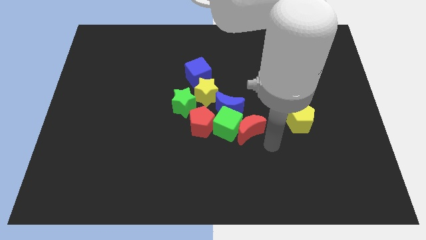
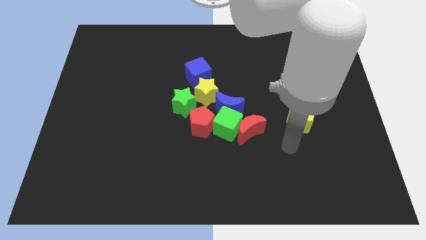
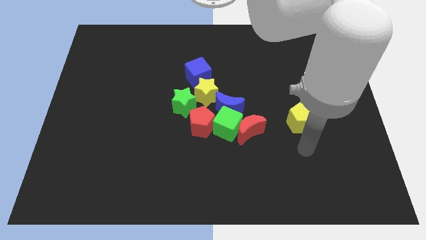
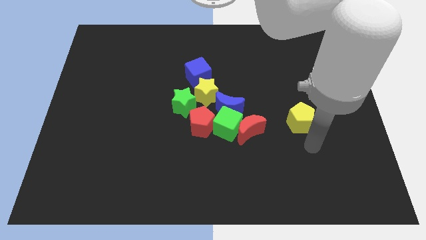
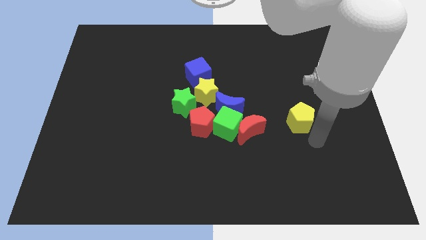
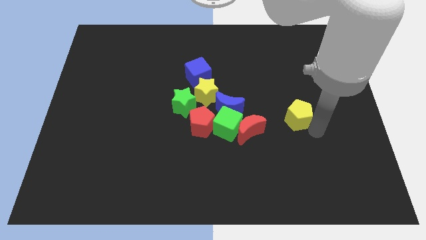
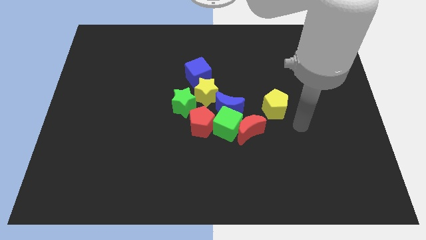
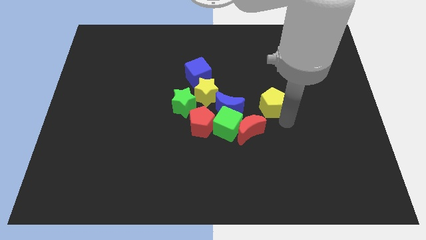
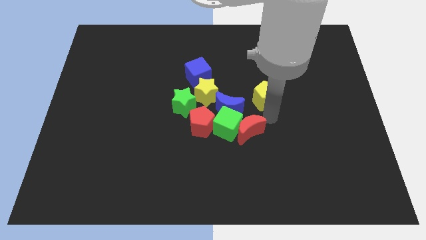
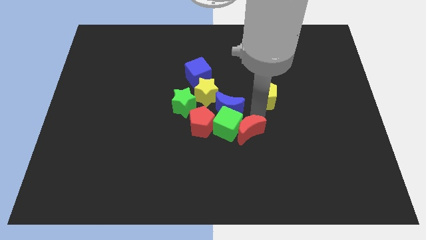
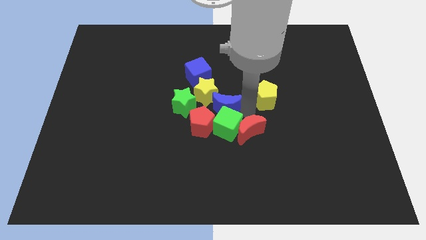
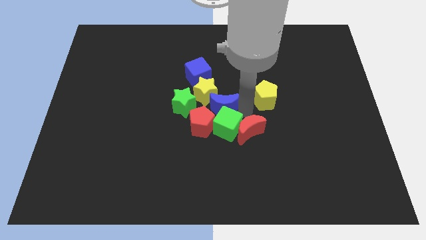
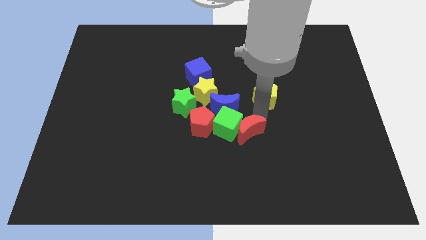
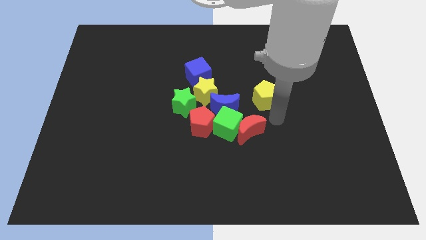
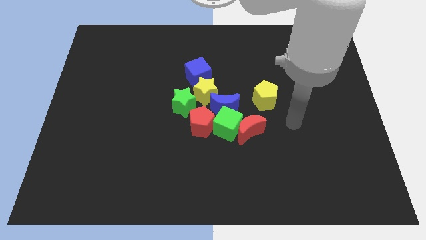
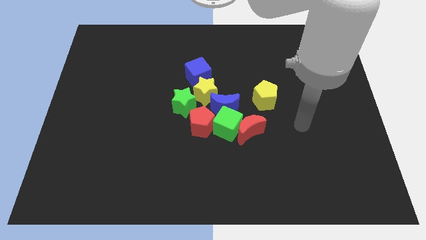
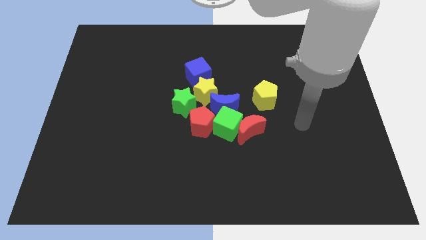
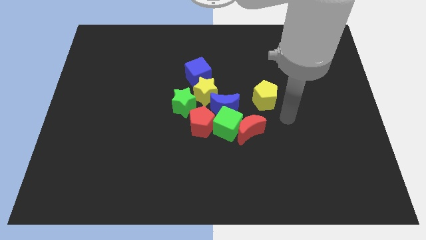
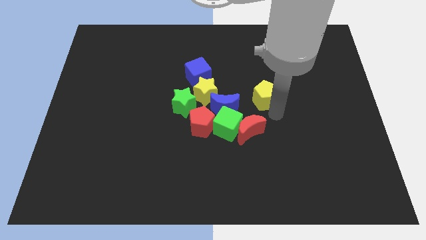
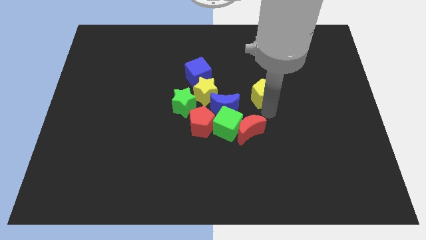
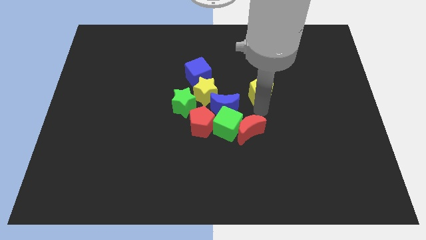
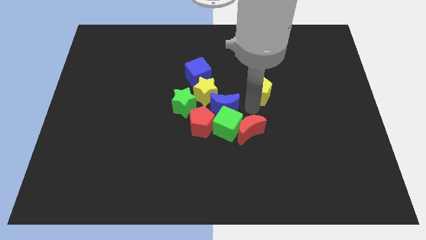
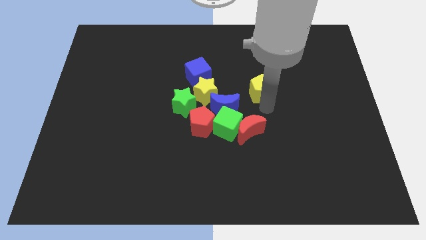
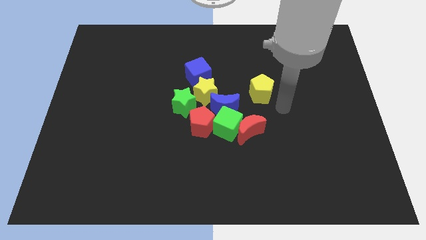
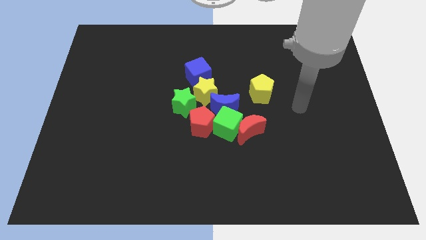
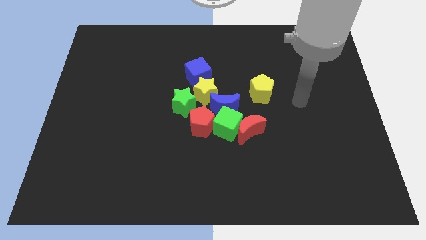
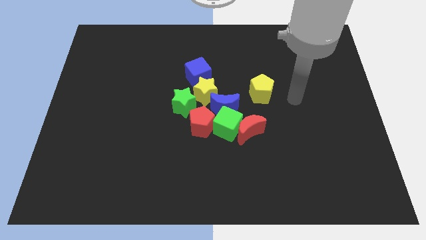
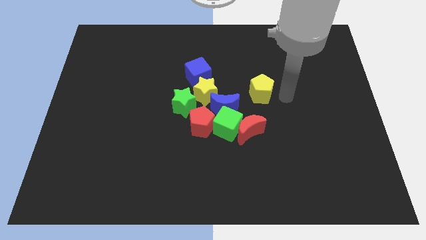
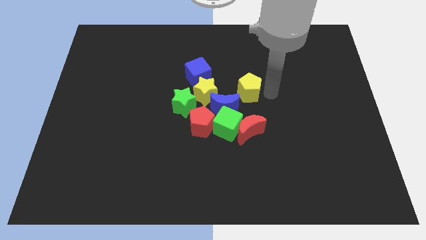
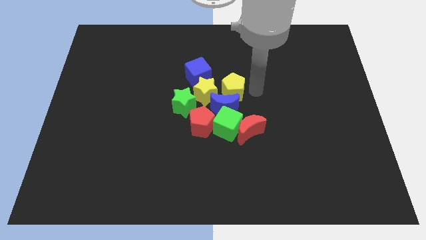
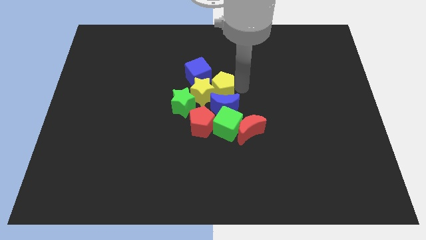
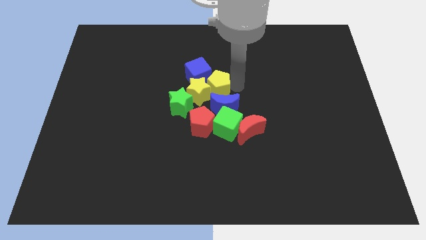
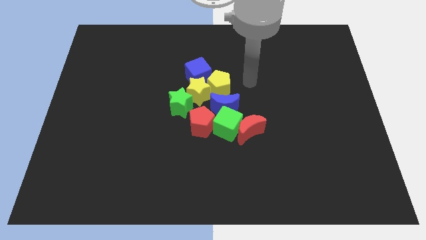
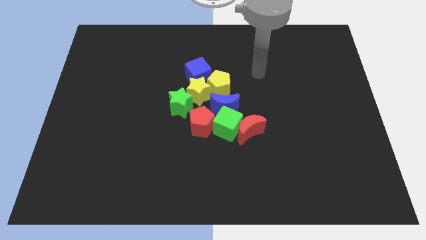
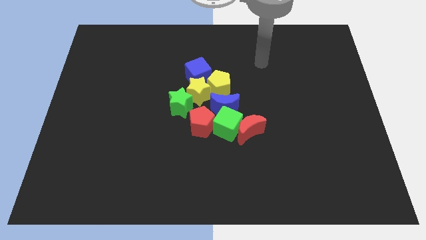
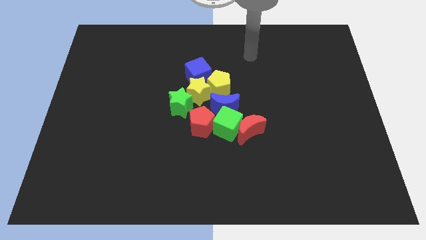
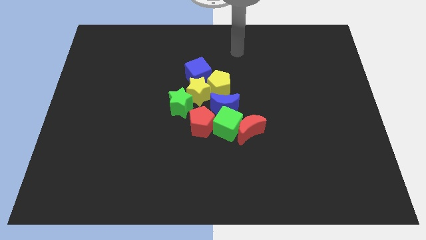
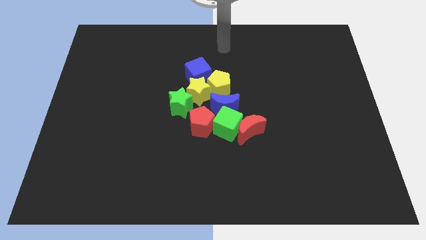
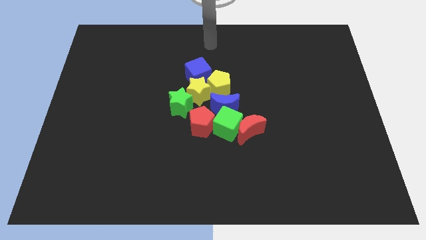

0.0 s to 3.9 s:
push the yellow pentagon to the center of the board

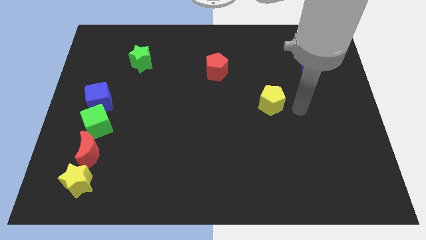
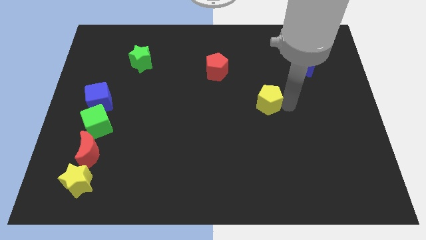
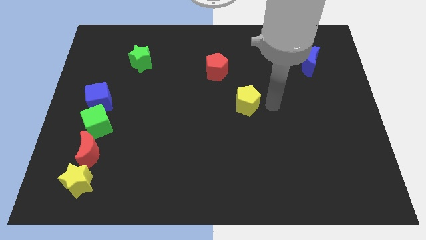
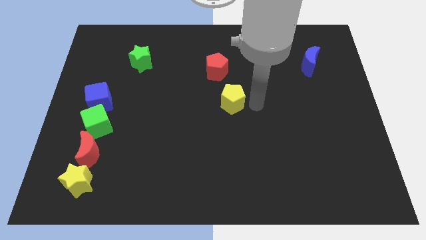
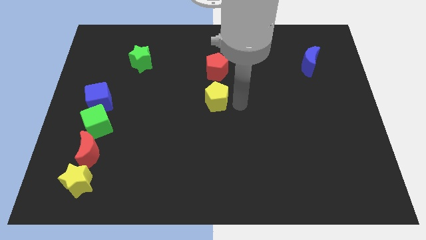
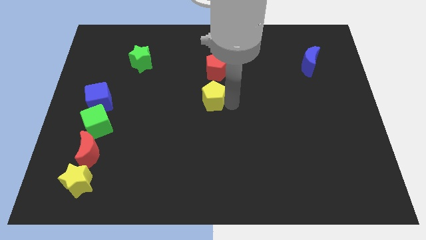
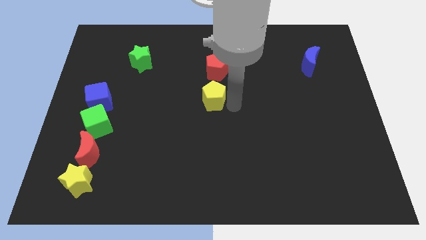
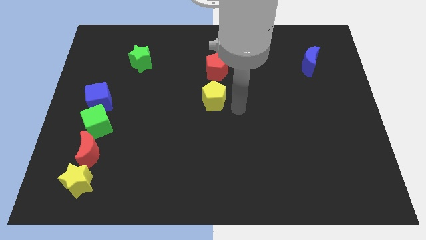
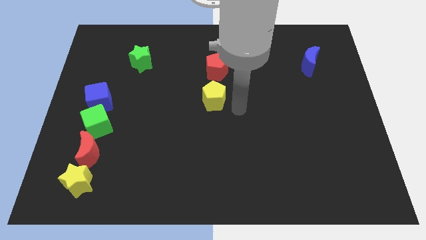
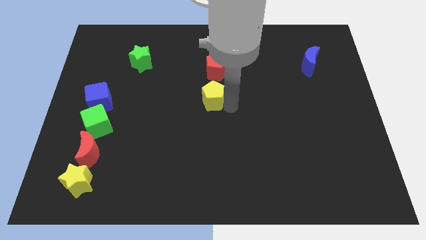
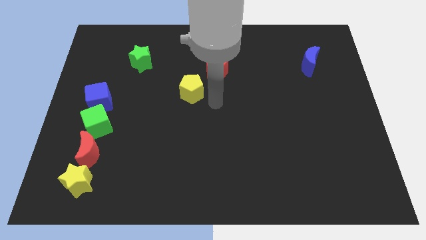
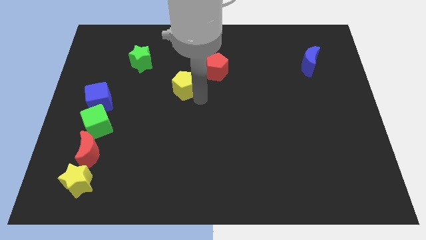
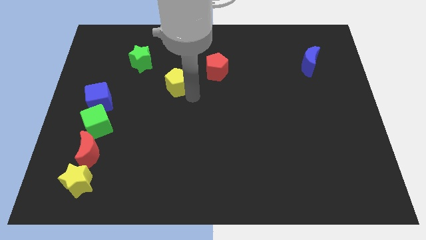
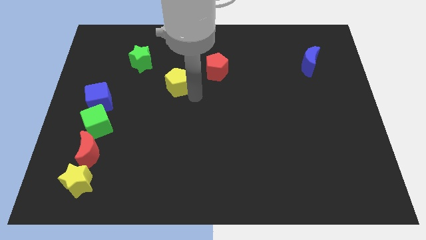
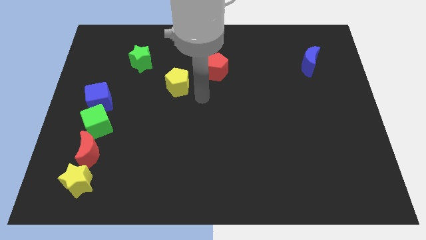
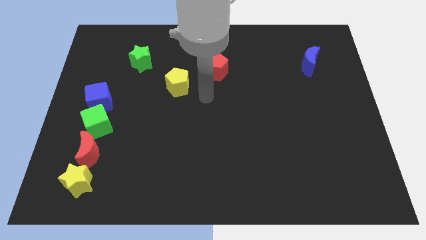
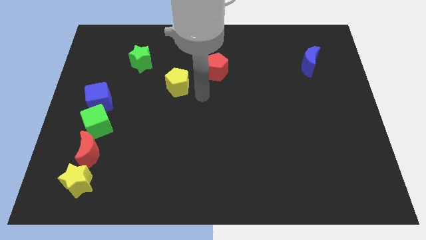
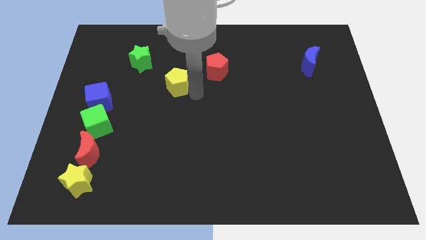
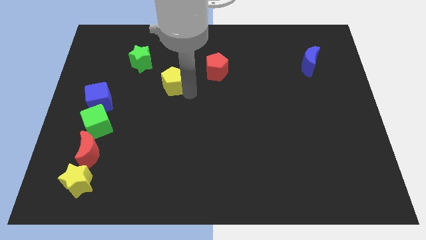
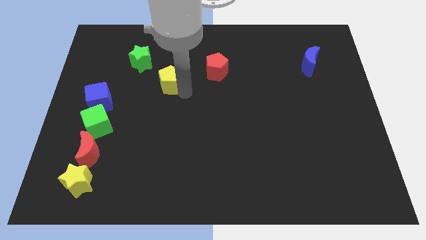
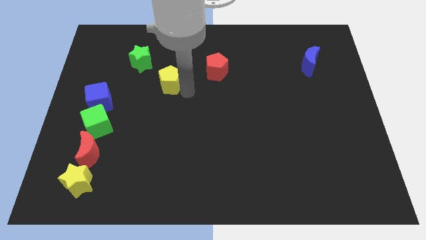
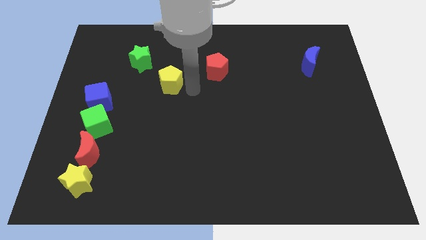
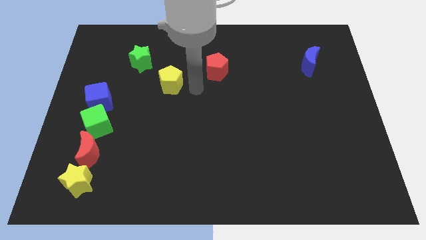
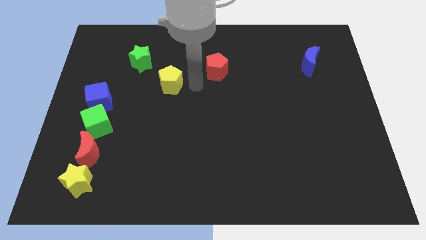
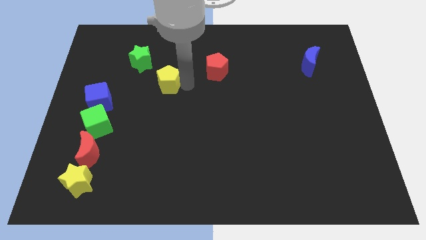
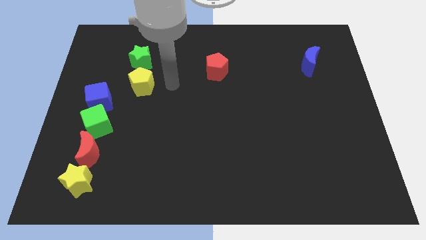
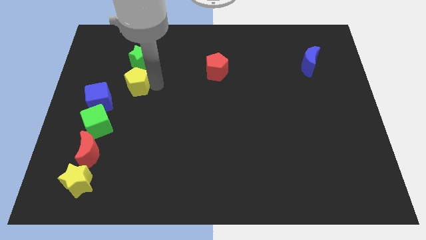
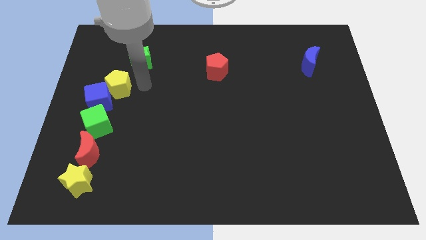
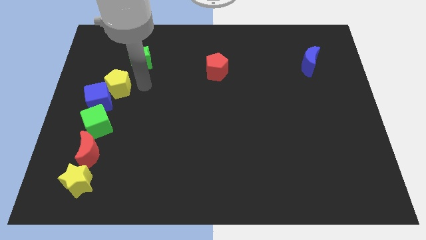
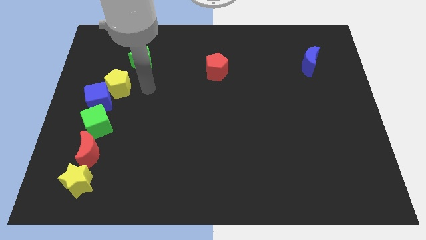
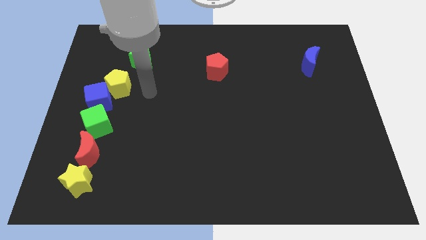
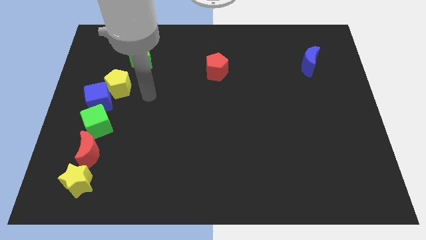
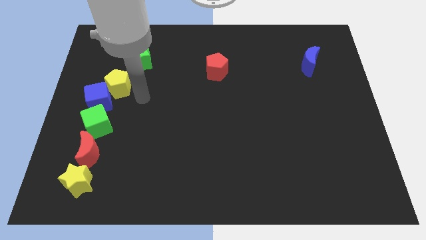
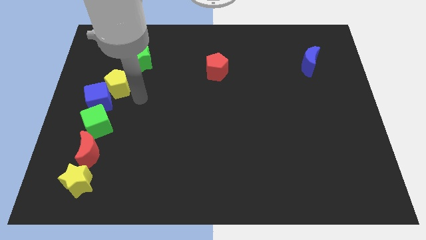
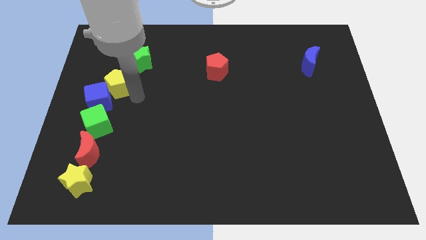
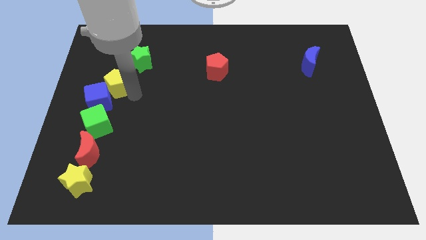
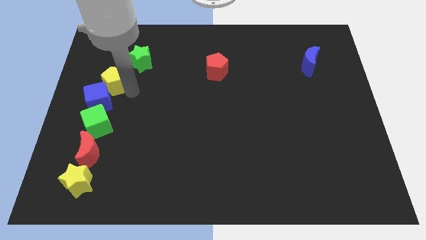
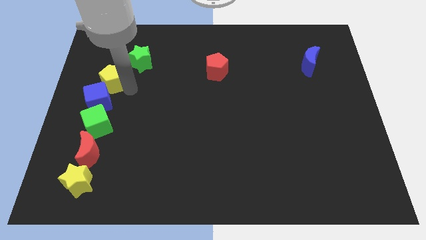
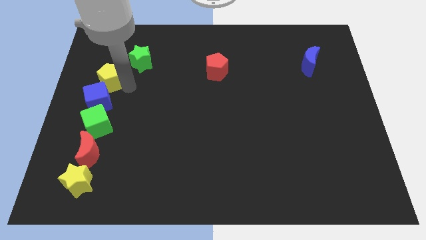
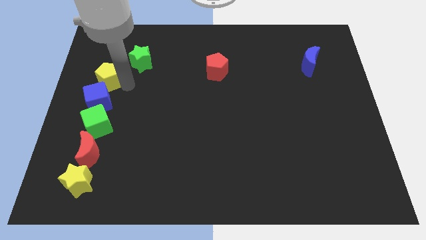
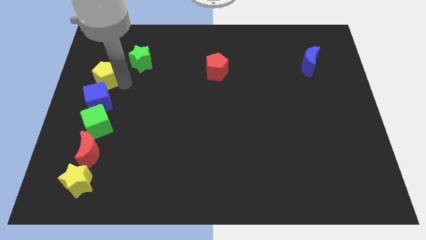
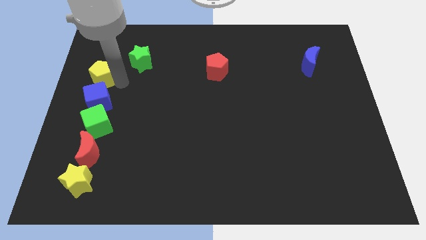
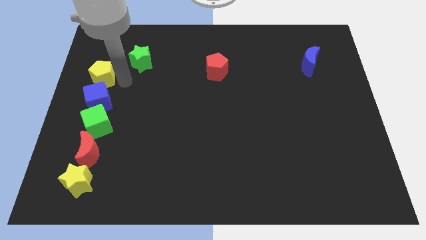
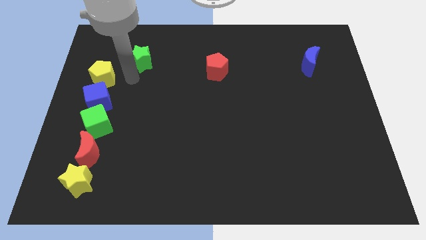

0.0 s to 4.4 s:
slide the yellow pentagon to the top of the blue cube

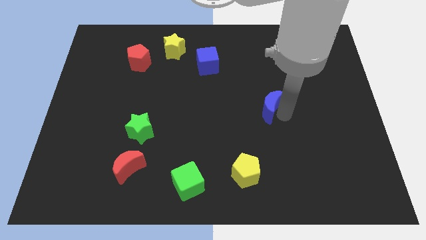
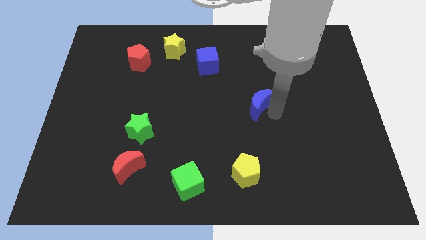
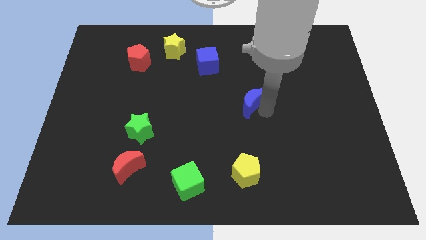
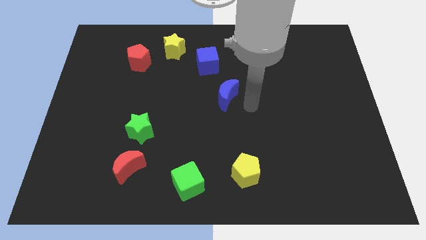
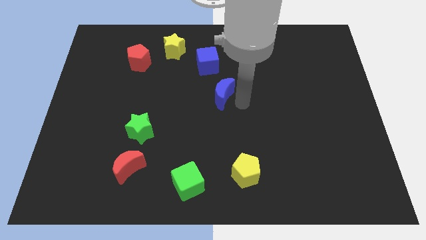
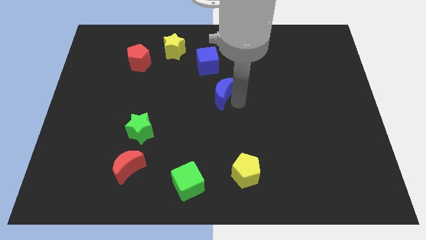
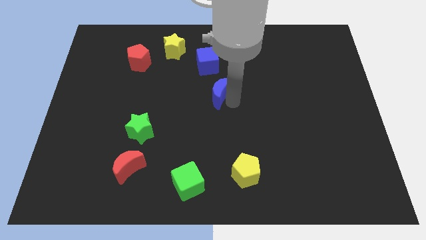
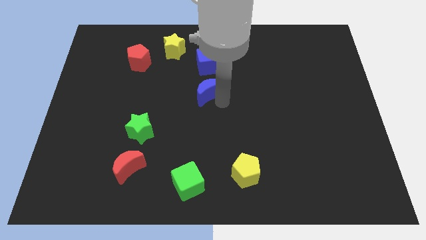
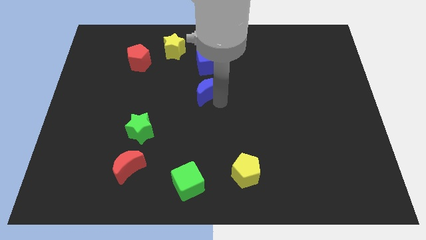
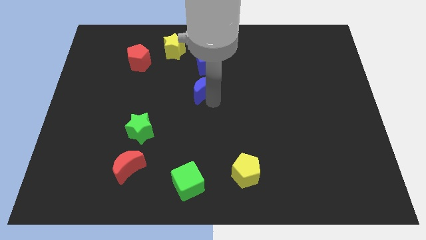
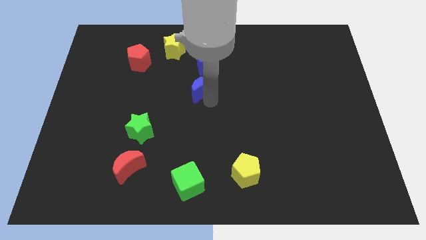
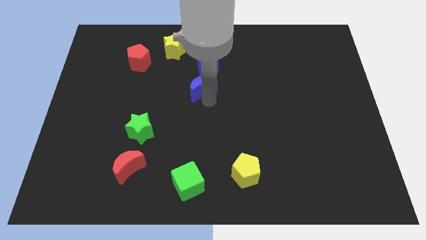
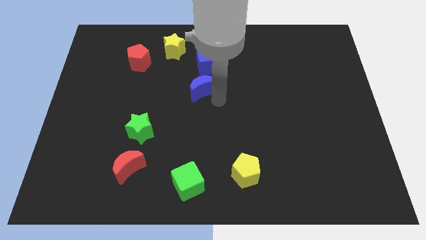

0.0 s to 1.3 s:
put the blue moon at the bottom of blue cube
